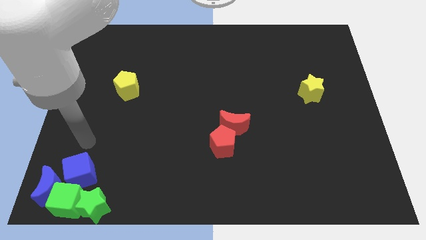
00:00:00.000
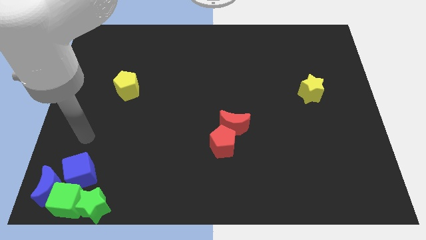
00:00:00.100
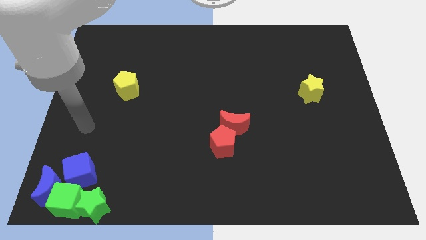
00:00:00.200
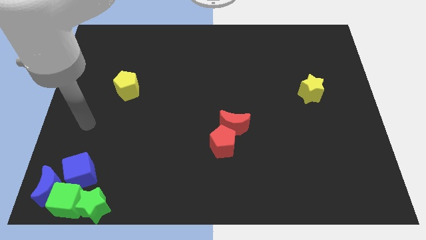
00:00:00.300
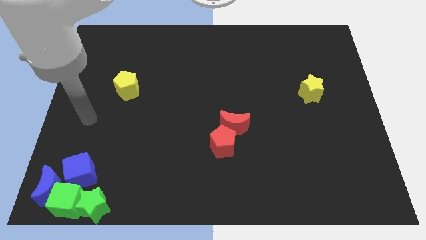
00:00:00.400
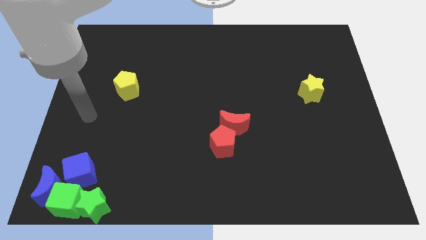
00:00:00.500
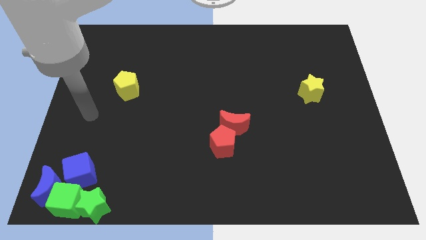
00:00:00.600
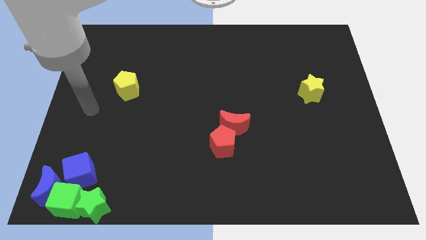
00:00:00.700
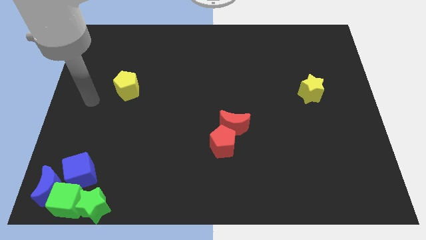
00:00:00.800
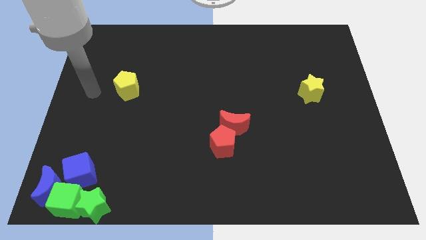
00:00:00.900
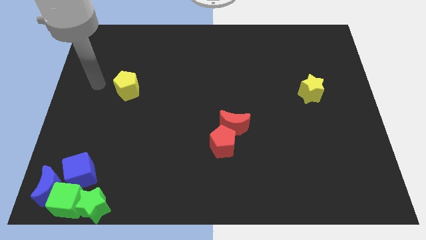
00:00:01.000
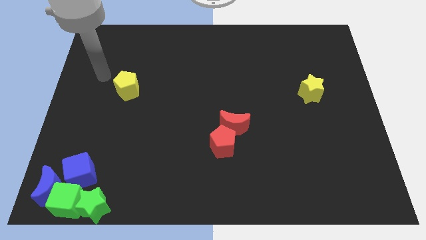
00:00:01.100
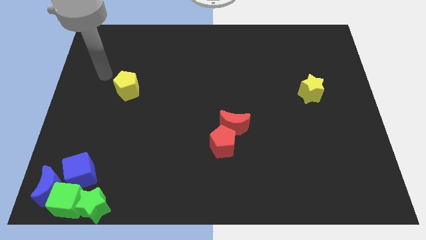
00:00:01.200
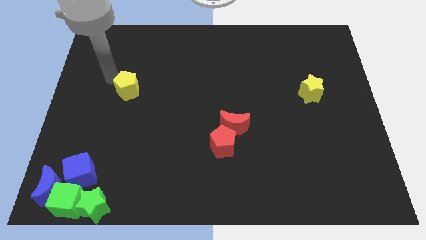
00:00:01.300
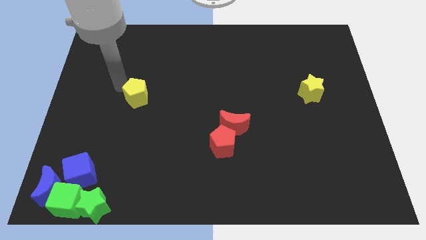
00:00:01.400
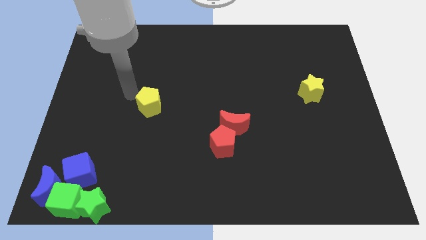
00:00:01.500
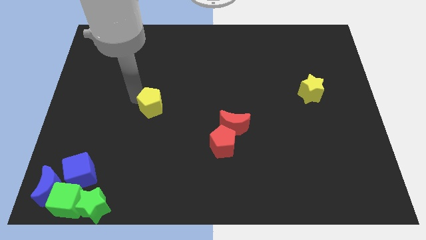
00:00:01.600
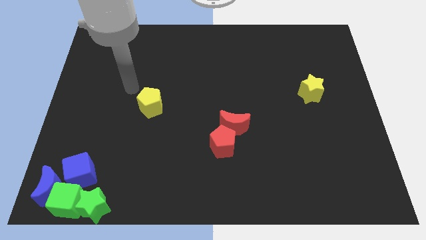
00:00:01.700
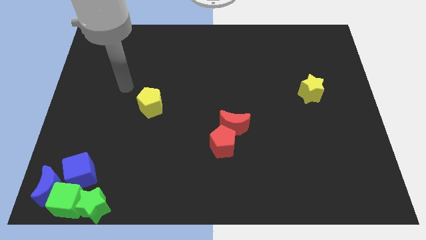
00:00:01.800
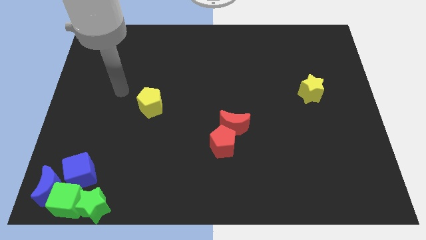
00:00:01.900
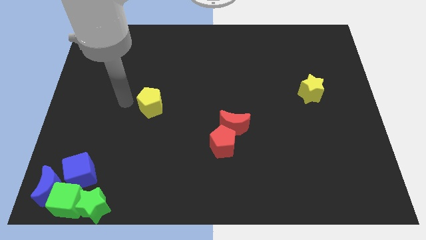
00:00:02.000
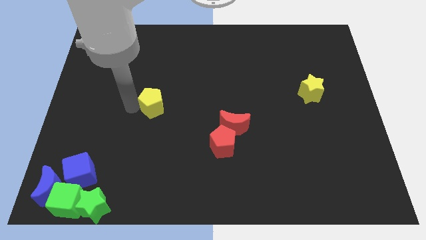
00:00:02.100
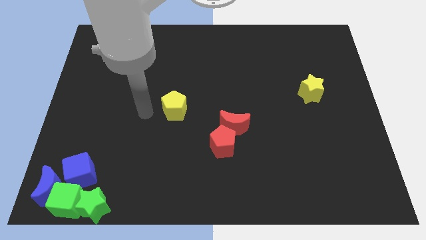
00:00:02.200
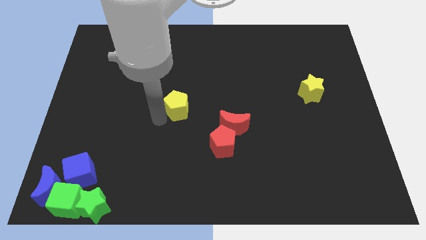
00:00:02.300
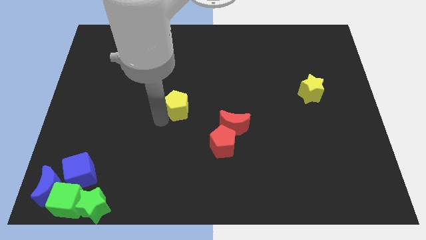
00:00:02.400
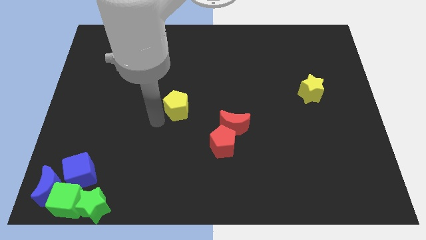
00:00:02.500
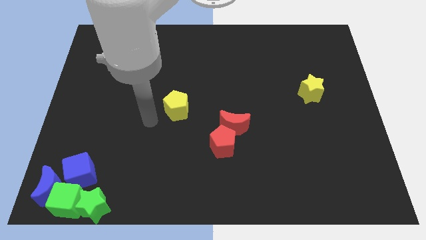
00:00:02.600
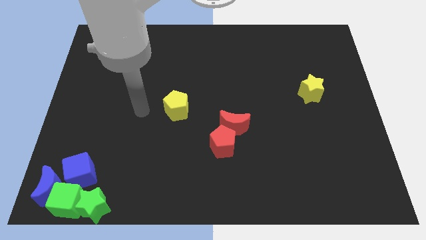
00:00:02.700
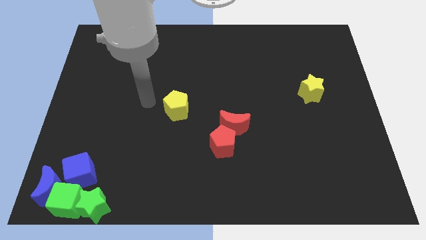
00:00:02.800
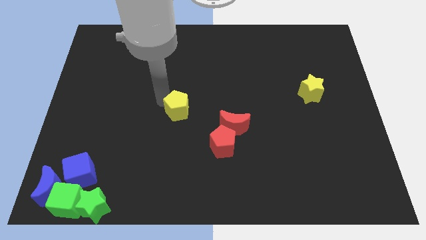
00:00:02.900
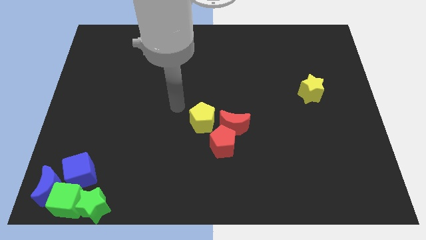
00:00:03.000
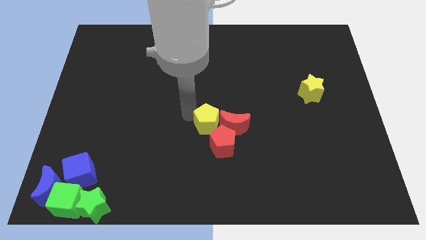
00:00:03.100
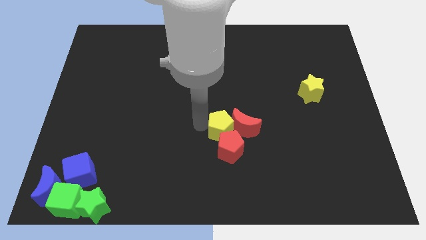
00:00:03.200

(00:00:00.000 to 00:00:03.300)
push the yellow pentagon into the group of blocks

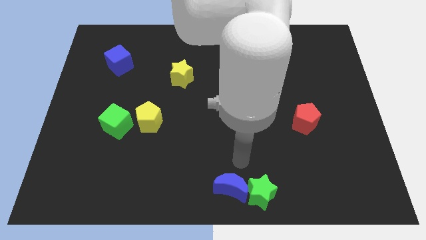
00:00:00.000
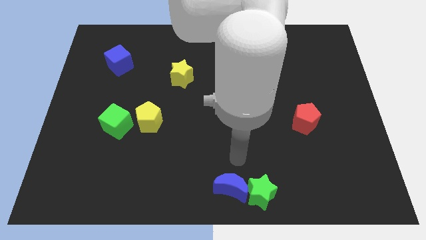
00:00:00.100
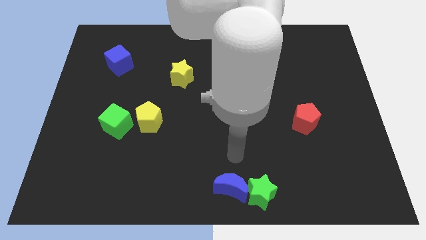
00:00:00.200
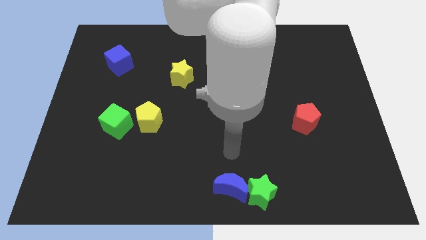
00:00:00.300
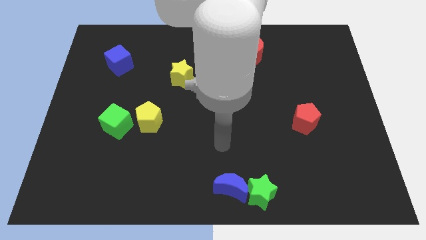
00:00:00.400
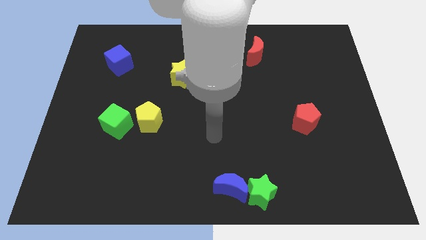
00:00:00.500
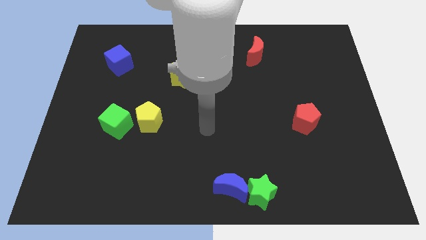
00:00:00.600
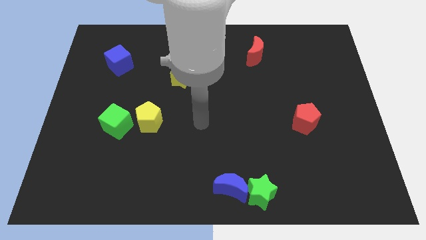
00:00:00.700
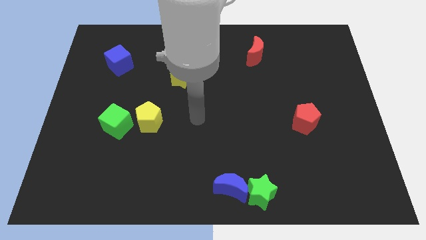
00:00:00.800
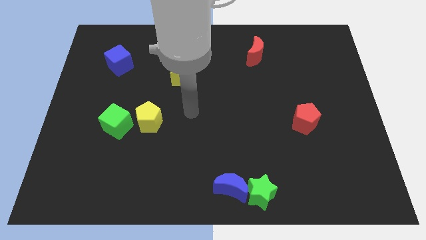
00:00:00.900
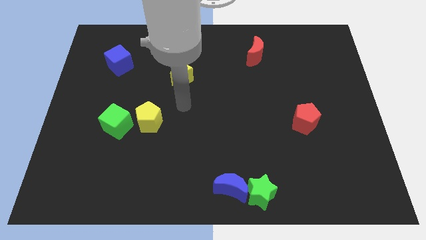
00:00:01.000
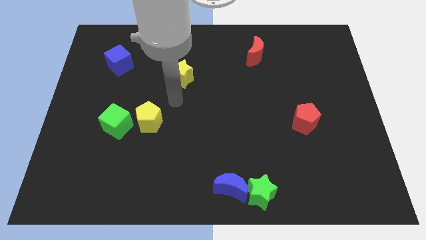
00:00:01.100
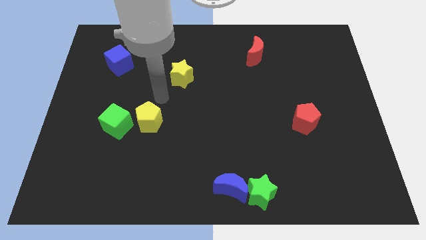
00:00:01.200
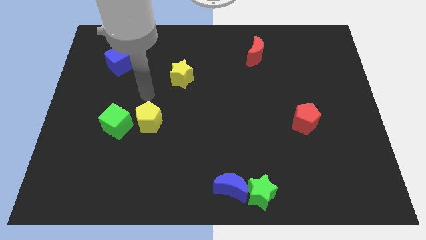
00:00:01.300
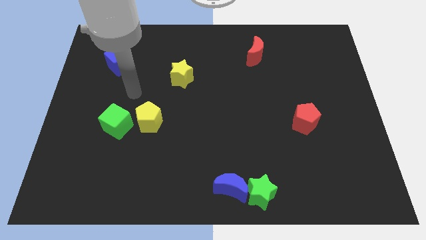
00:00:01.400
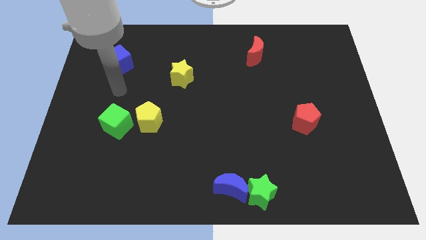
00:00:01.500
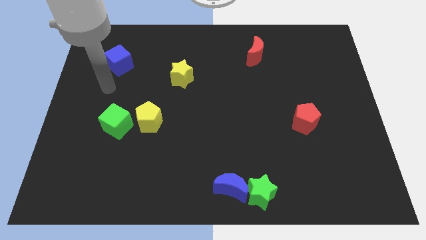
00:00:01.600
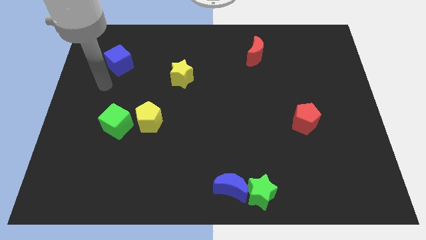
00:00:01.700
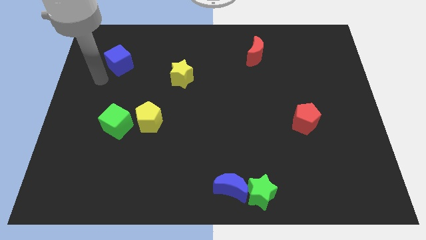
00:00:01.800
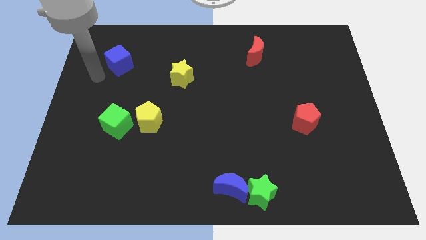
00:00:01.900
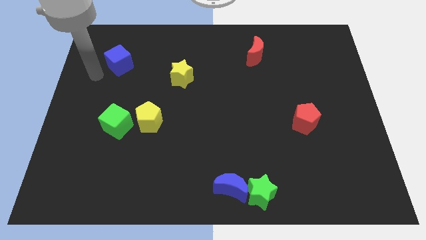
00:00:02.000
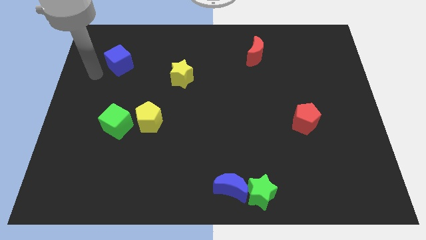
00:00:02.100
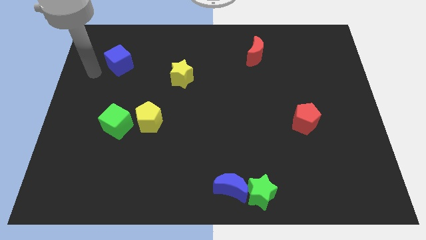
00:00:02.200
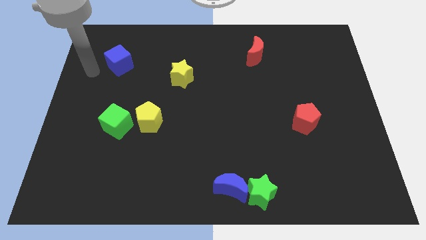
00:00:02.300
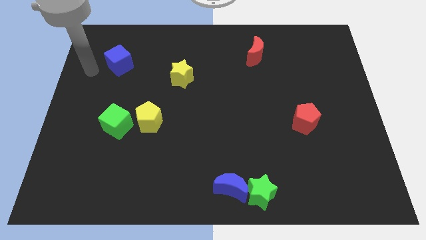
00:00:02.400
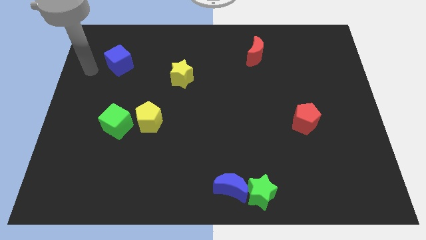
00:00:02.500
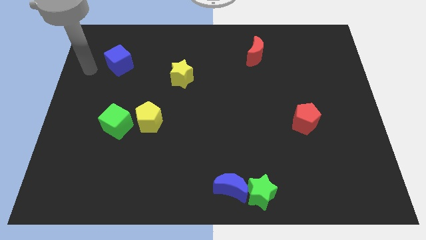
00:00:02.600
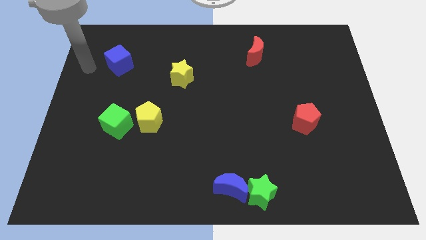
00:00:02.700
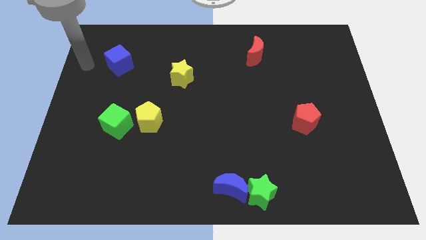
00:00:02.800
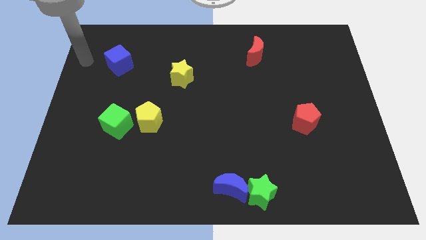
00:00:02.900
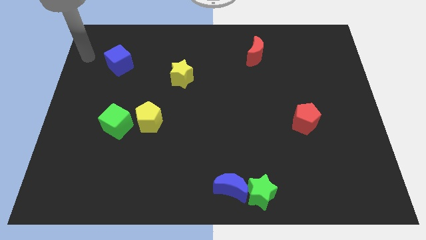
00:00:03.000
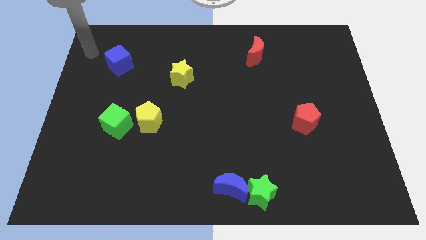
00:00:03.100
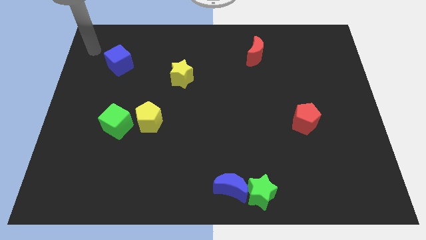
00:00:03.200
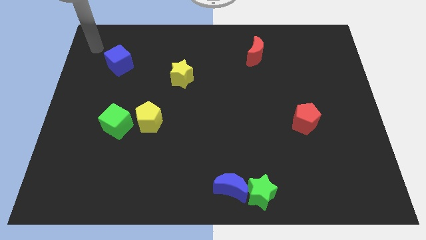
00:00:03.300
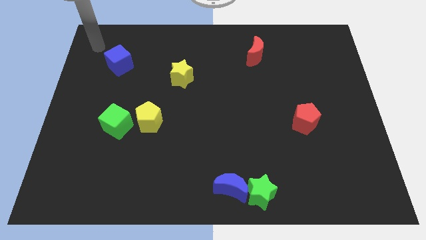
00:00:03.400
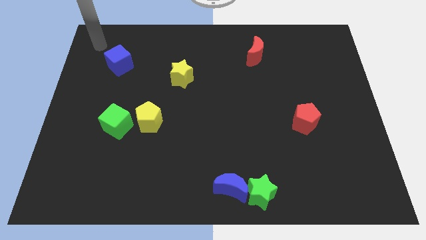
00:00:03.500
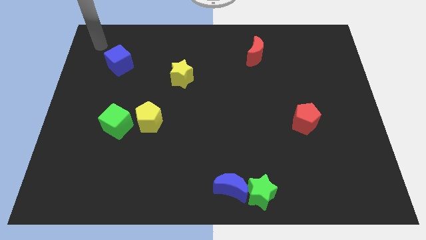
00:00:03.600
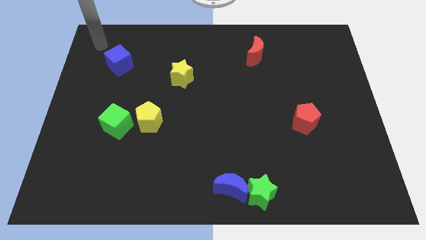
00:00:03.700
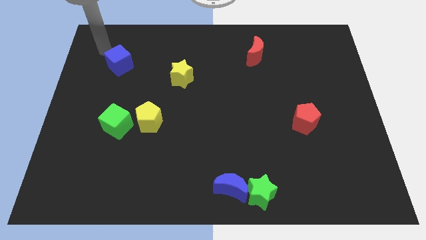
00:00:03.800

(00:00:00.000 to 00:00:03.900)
move your arm towards the top of the blue cube

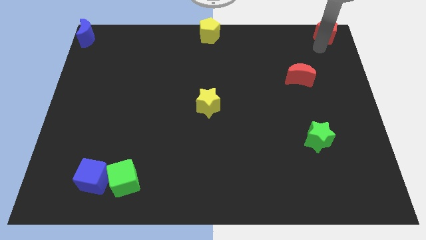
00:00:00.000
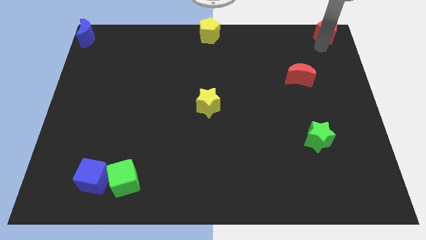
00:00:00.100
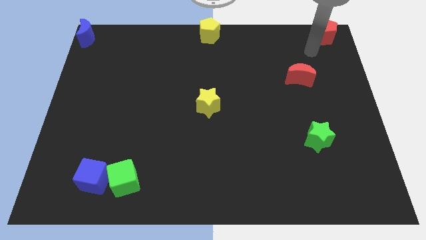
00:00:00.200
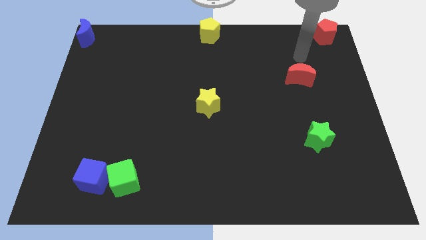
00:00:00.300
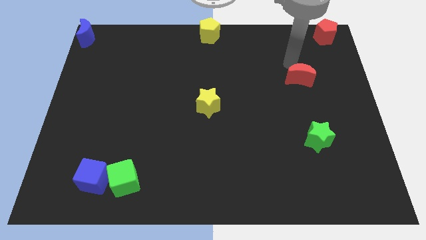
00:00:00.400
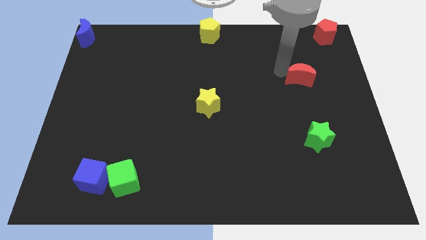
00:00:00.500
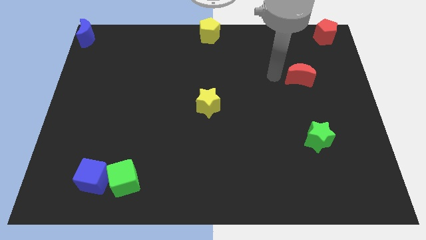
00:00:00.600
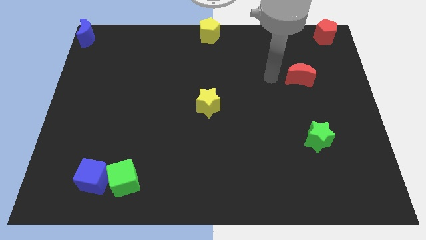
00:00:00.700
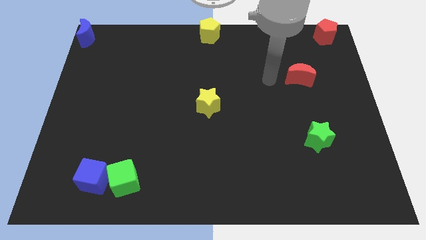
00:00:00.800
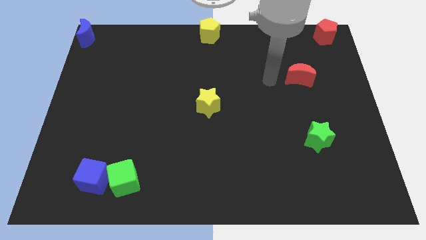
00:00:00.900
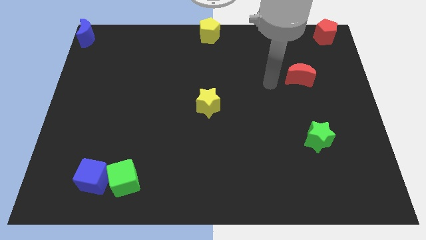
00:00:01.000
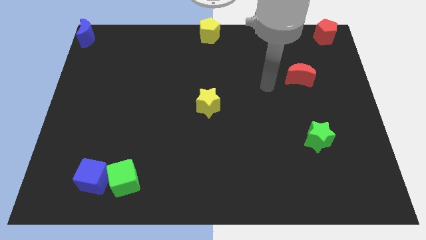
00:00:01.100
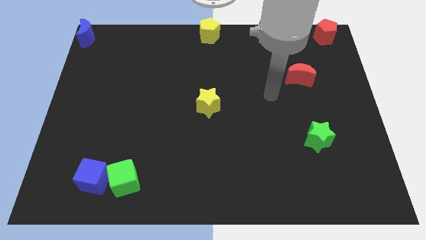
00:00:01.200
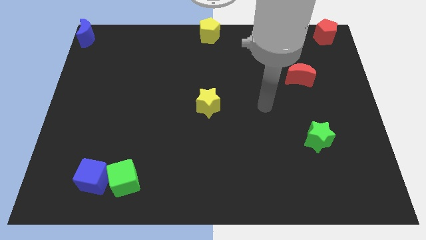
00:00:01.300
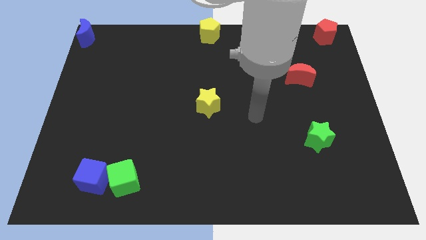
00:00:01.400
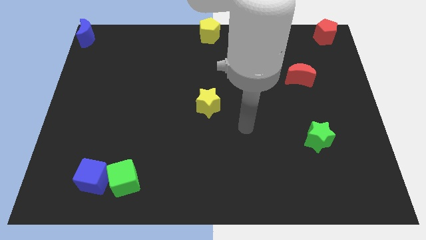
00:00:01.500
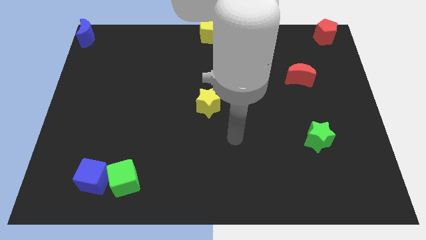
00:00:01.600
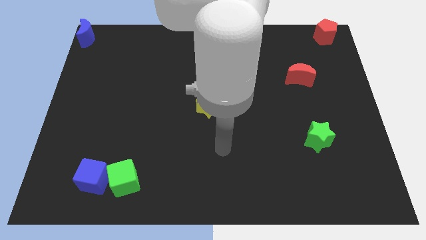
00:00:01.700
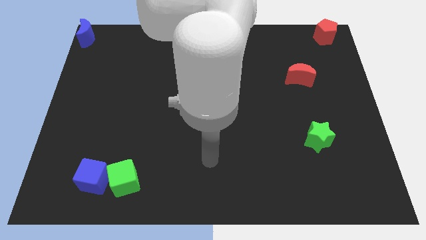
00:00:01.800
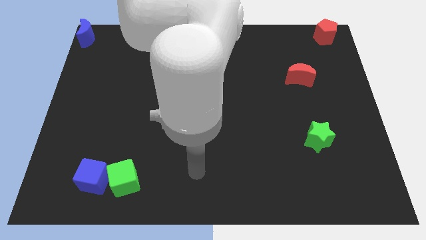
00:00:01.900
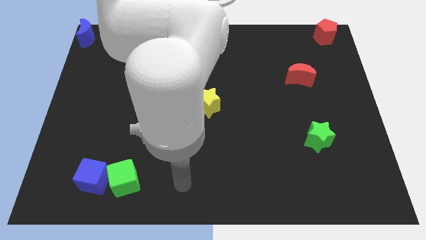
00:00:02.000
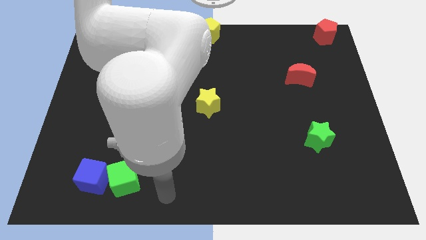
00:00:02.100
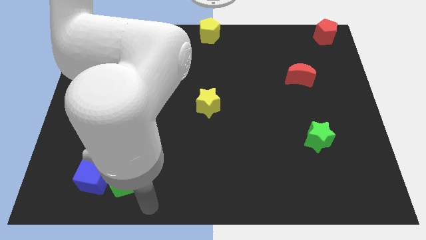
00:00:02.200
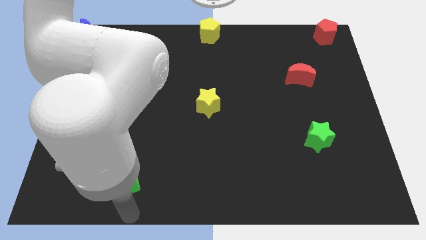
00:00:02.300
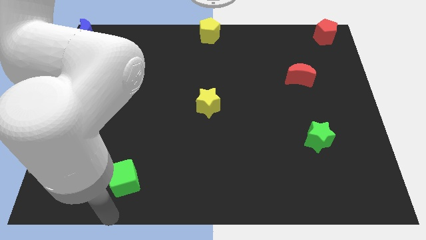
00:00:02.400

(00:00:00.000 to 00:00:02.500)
move your arm towards the bottom of the board
